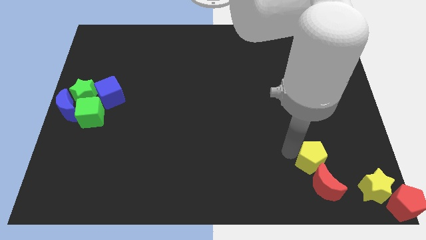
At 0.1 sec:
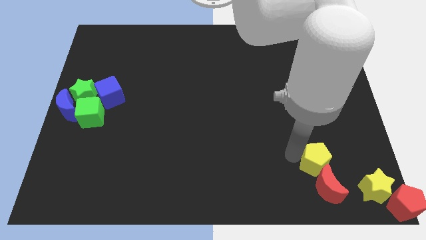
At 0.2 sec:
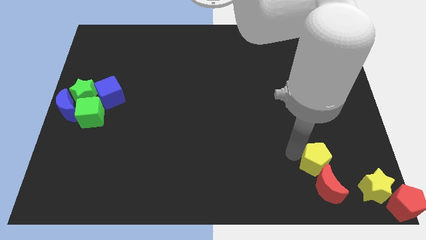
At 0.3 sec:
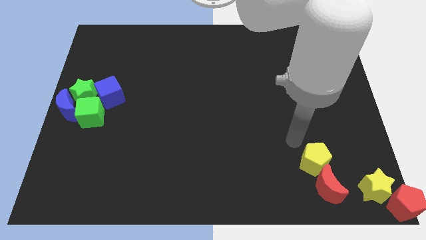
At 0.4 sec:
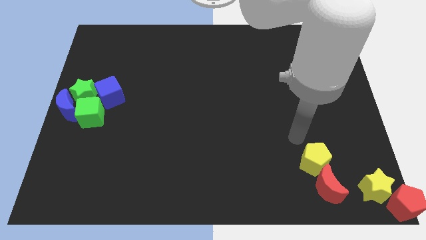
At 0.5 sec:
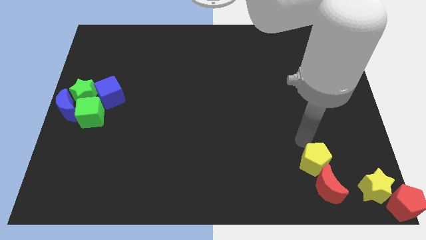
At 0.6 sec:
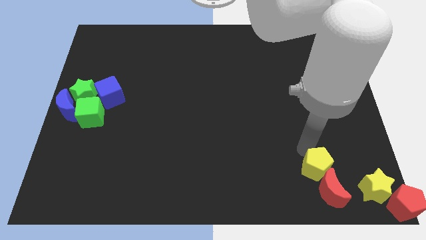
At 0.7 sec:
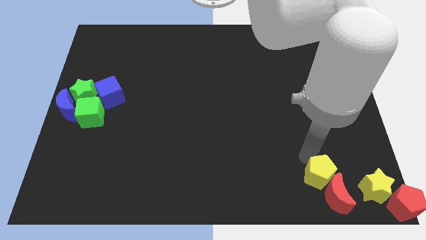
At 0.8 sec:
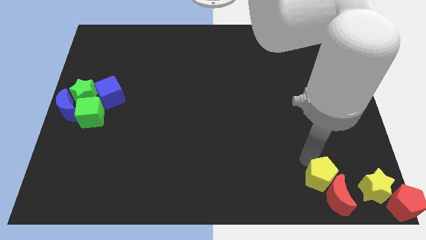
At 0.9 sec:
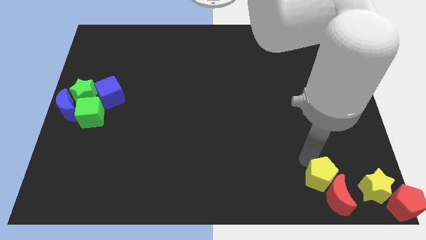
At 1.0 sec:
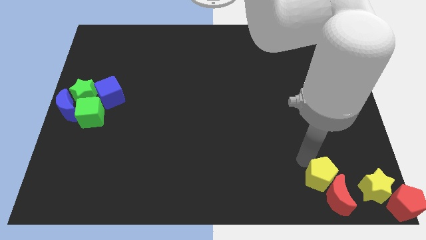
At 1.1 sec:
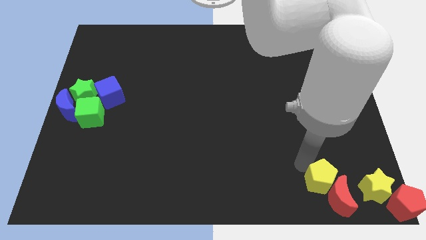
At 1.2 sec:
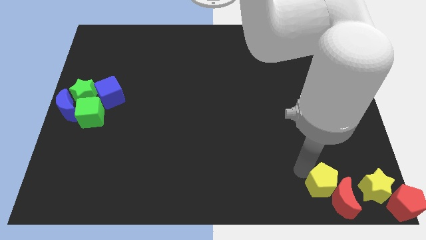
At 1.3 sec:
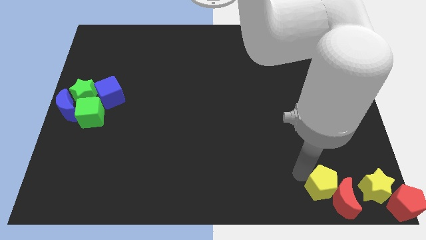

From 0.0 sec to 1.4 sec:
put the yellow pentagon and red moon towards the bottom right corner

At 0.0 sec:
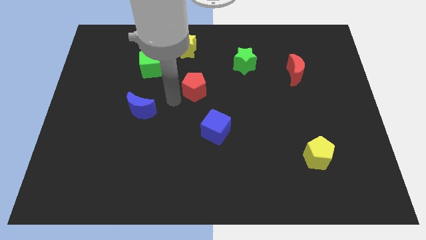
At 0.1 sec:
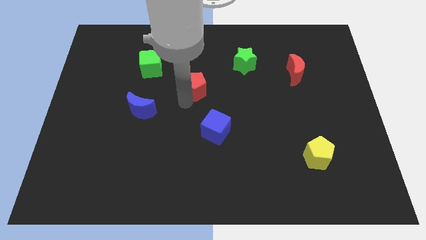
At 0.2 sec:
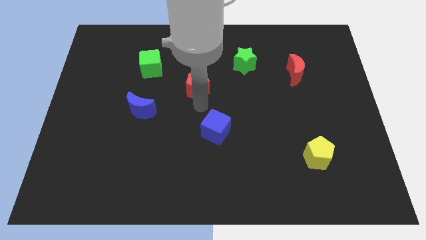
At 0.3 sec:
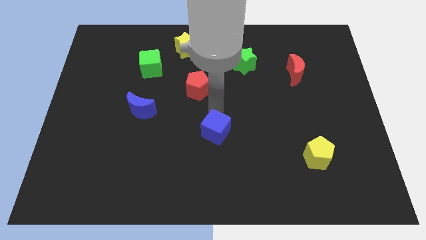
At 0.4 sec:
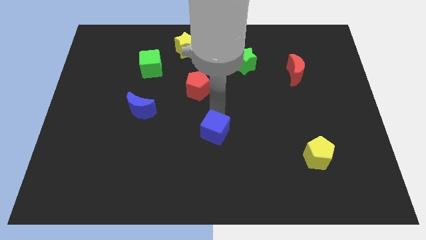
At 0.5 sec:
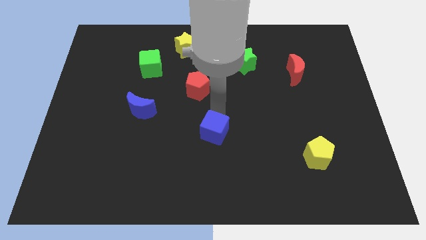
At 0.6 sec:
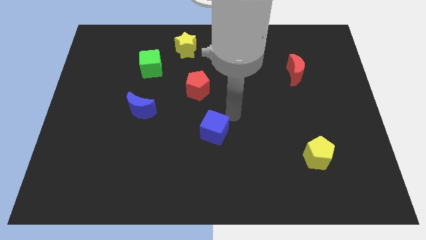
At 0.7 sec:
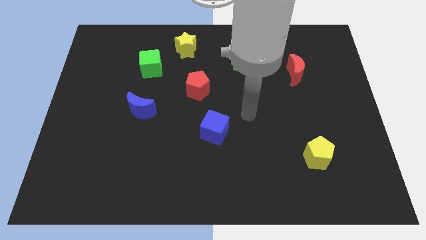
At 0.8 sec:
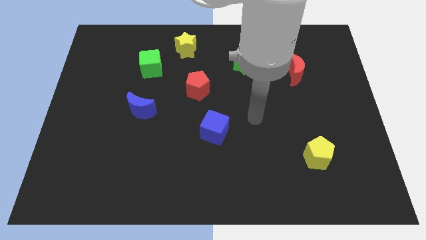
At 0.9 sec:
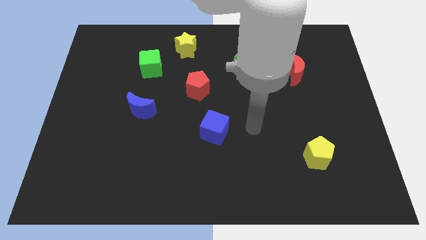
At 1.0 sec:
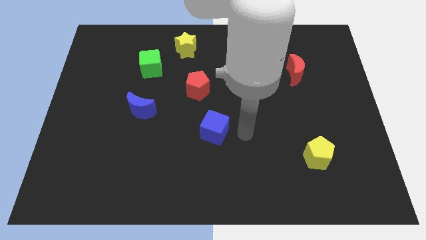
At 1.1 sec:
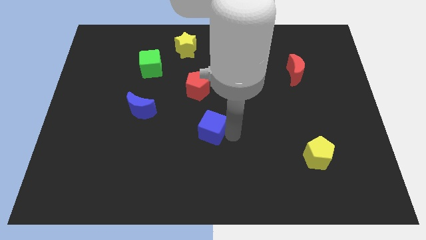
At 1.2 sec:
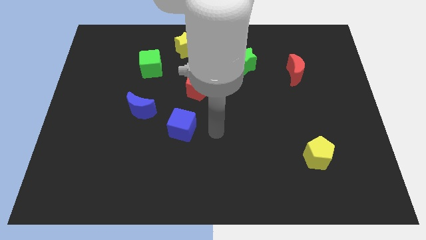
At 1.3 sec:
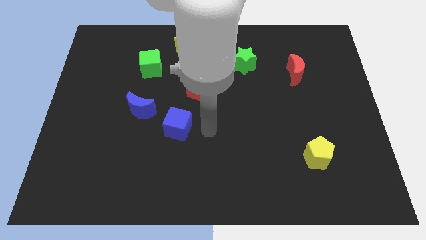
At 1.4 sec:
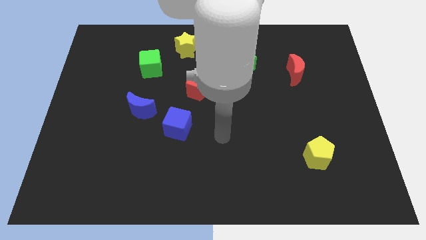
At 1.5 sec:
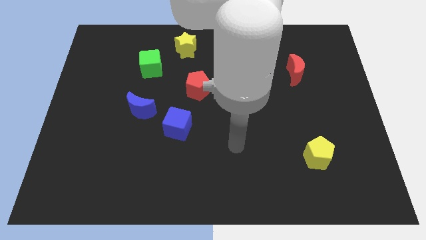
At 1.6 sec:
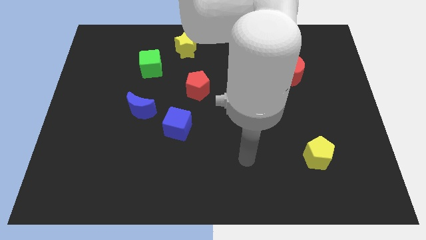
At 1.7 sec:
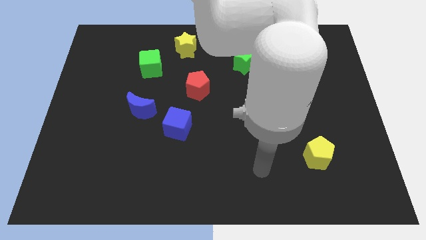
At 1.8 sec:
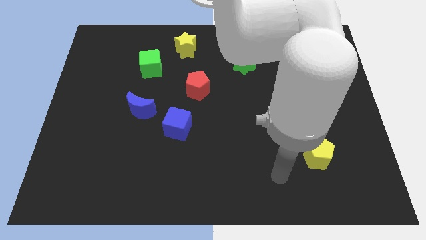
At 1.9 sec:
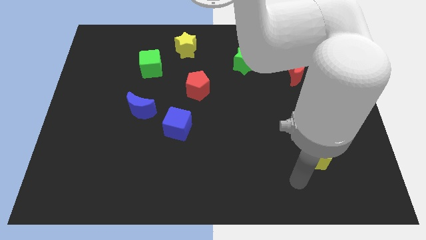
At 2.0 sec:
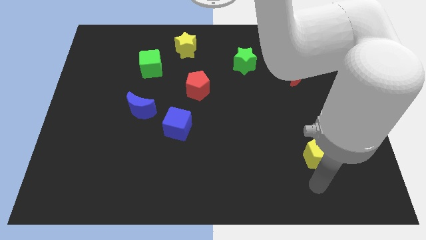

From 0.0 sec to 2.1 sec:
push blue cube towards blue moon

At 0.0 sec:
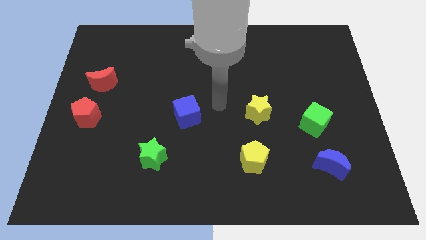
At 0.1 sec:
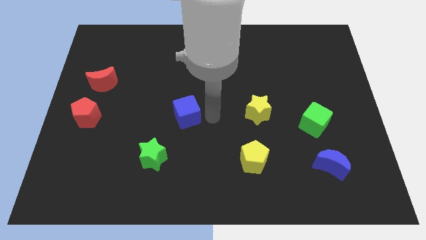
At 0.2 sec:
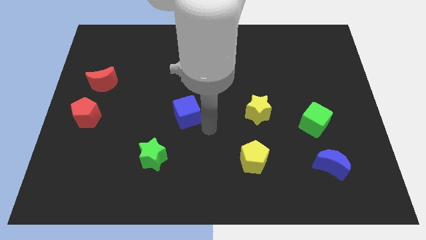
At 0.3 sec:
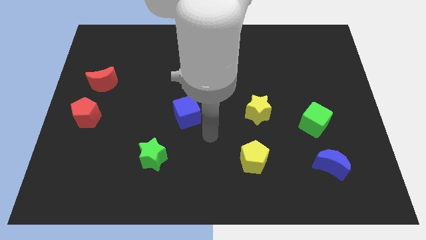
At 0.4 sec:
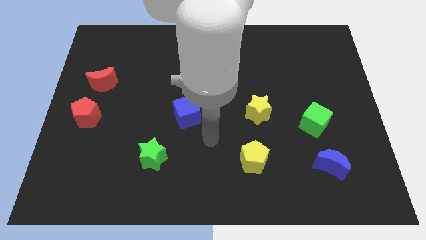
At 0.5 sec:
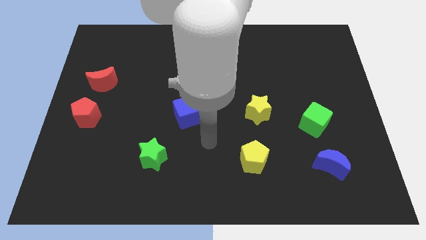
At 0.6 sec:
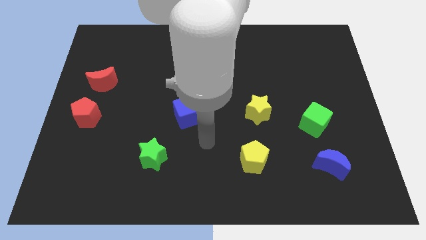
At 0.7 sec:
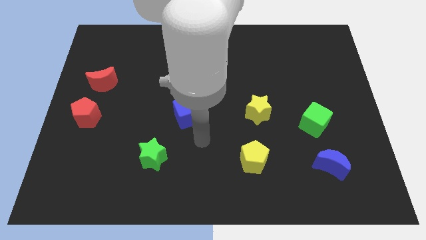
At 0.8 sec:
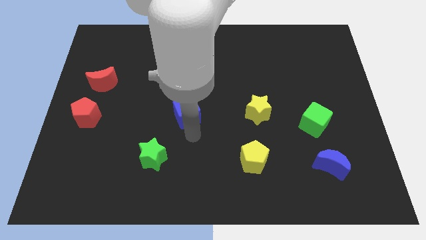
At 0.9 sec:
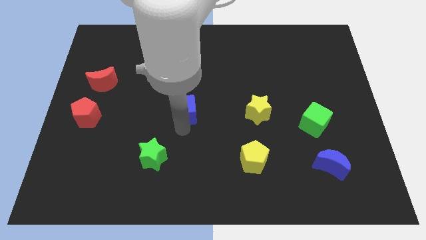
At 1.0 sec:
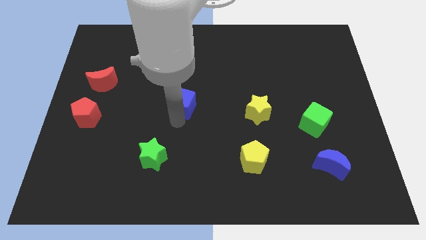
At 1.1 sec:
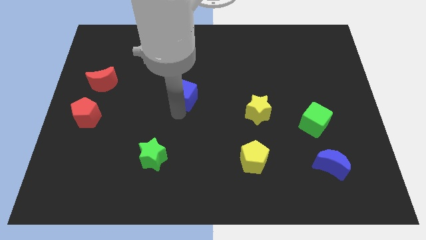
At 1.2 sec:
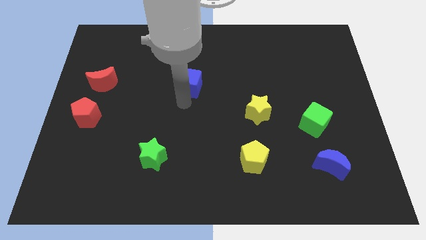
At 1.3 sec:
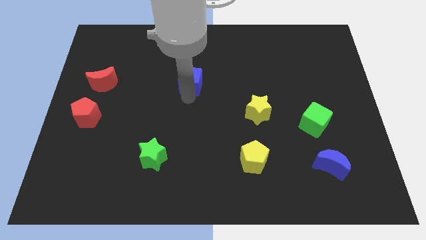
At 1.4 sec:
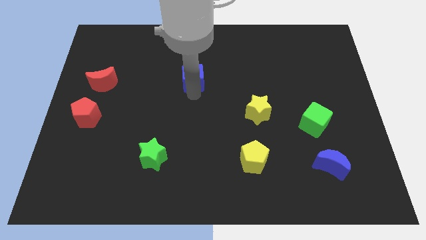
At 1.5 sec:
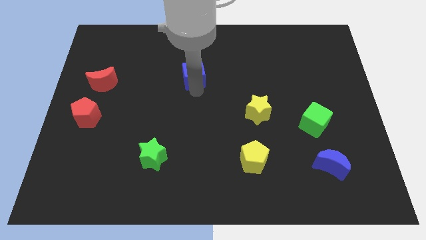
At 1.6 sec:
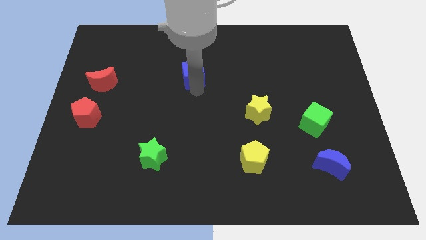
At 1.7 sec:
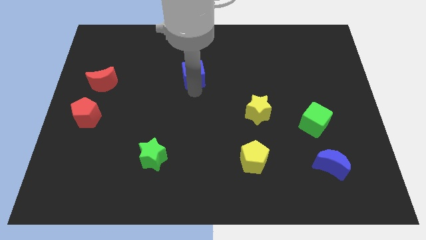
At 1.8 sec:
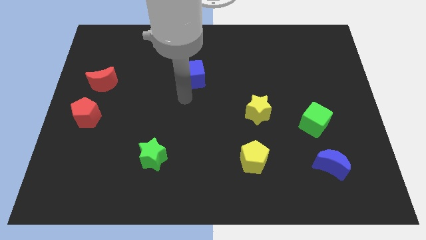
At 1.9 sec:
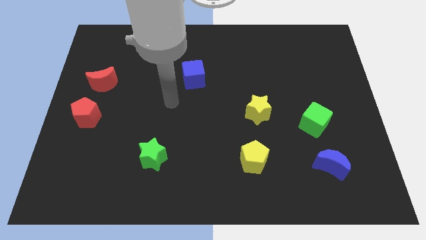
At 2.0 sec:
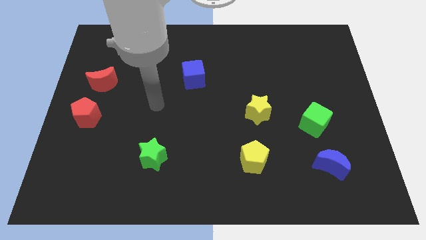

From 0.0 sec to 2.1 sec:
slightly move the blue cube towards the top of the board

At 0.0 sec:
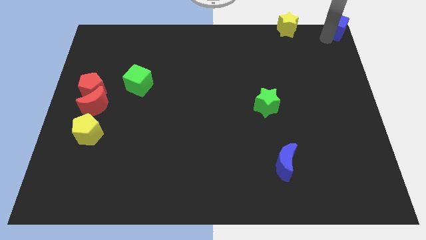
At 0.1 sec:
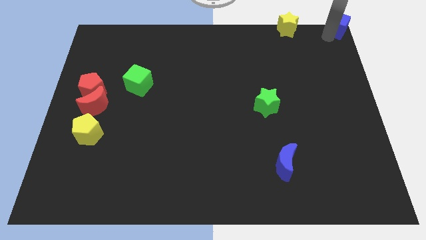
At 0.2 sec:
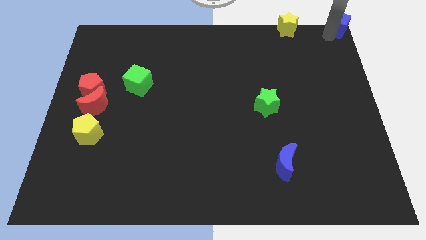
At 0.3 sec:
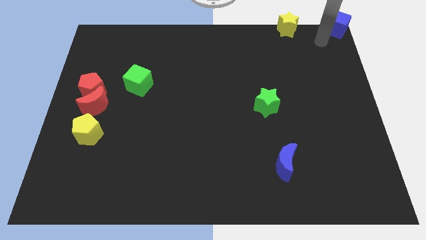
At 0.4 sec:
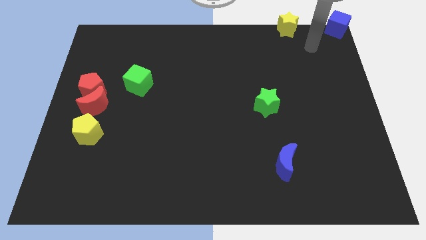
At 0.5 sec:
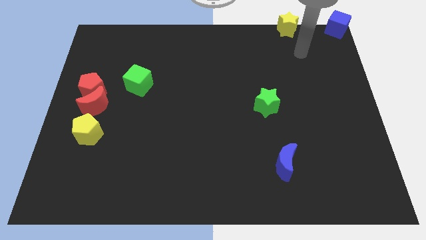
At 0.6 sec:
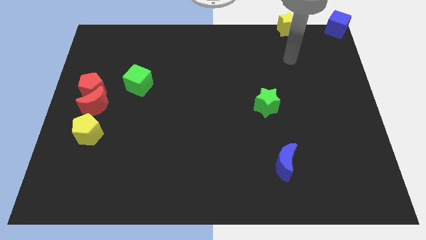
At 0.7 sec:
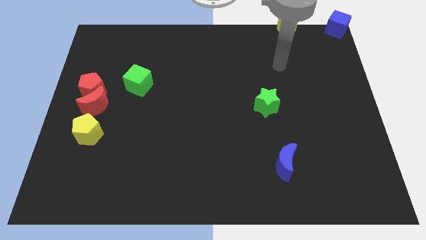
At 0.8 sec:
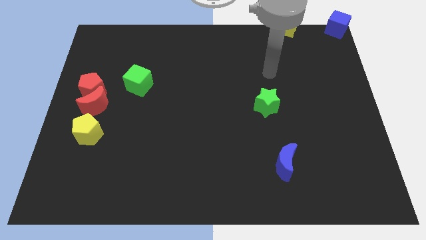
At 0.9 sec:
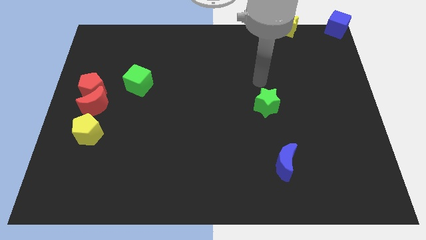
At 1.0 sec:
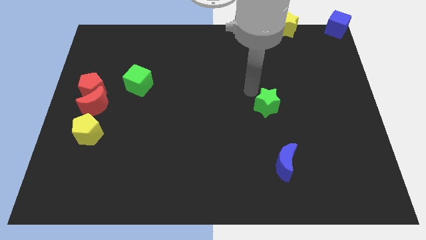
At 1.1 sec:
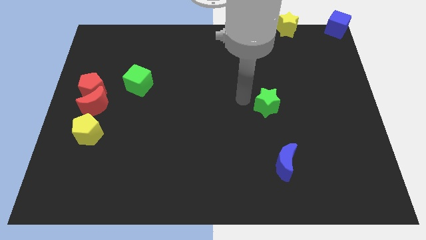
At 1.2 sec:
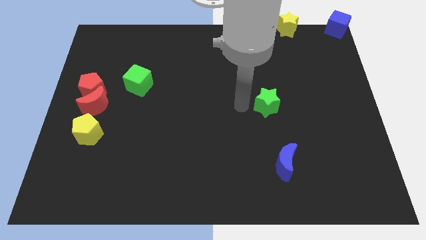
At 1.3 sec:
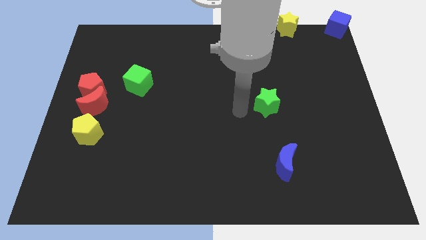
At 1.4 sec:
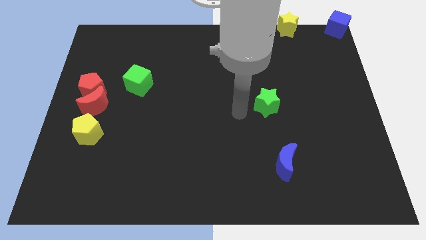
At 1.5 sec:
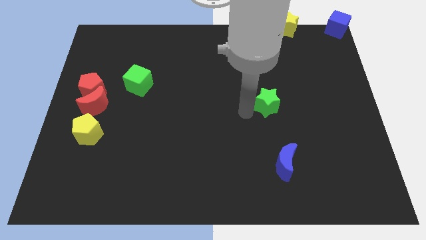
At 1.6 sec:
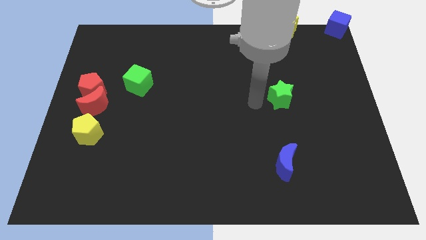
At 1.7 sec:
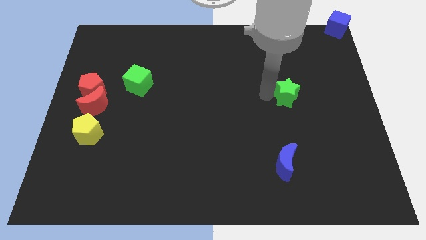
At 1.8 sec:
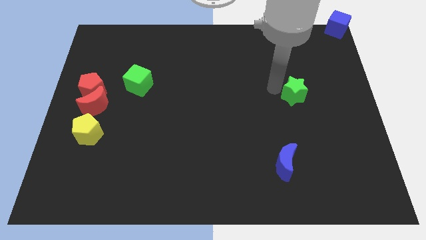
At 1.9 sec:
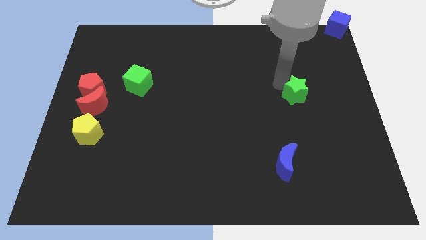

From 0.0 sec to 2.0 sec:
place the green star vertically below the yellow star

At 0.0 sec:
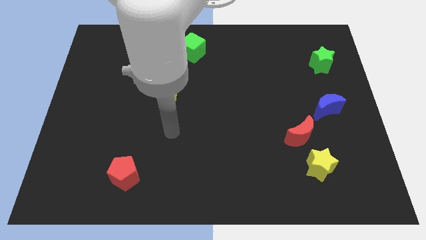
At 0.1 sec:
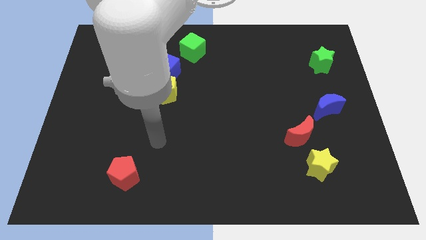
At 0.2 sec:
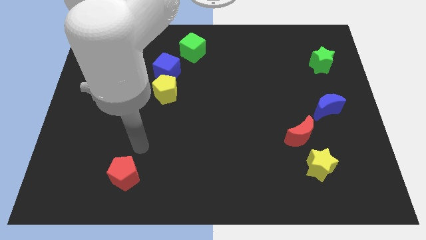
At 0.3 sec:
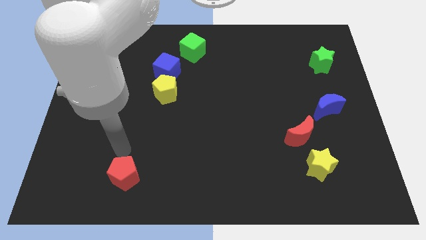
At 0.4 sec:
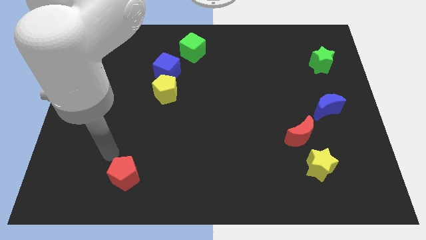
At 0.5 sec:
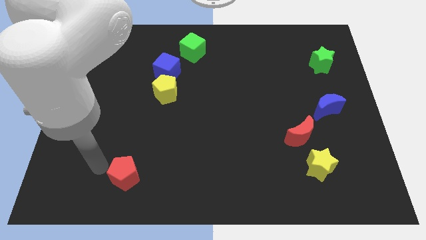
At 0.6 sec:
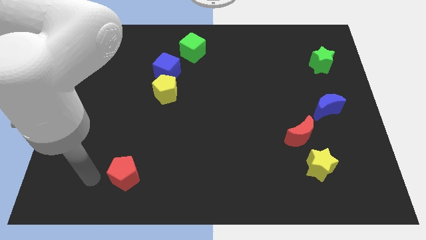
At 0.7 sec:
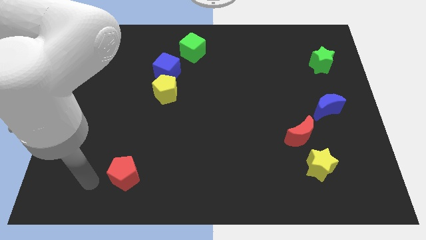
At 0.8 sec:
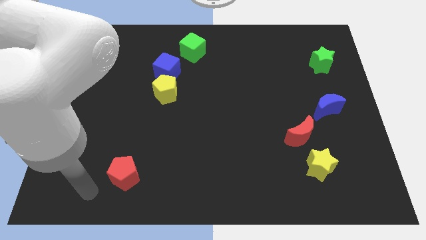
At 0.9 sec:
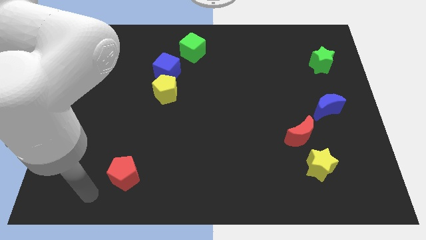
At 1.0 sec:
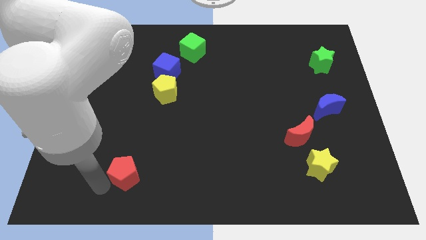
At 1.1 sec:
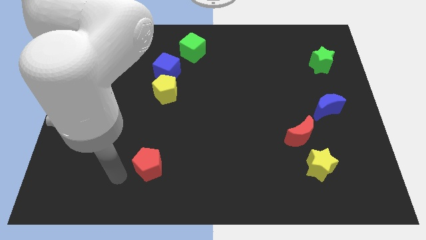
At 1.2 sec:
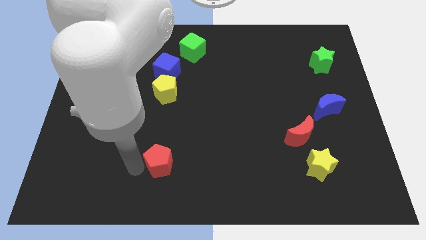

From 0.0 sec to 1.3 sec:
put the red pentagon vertically below the yellow pentagon
